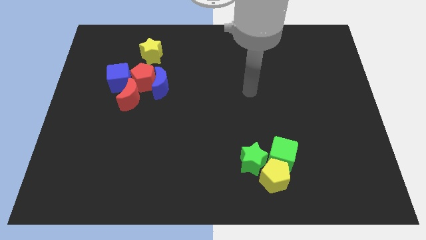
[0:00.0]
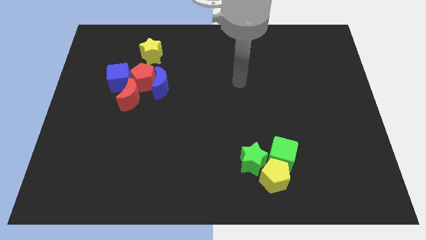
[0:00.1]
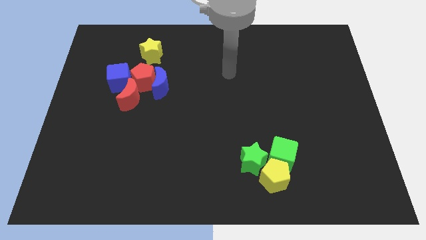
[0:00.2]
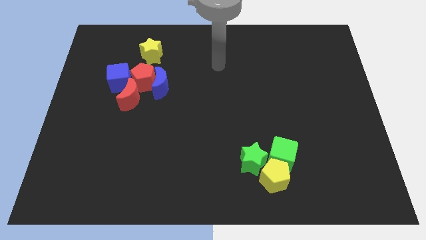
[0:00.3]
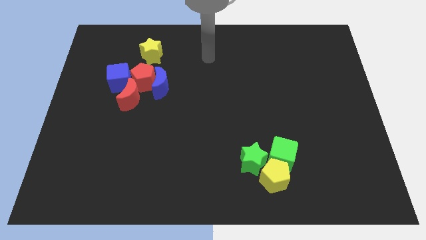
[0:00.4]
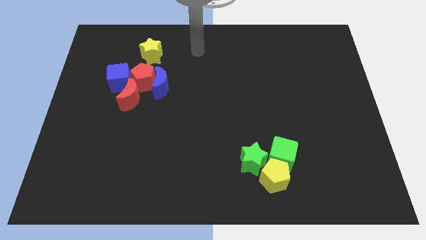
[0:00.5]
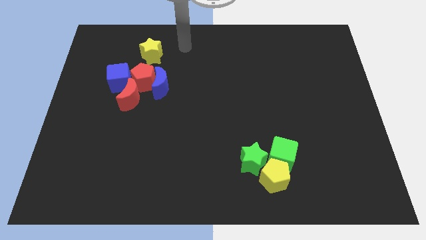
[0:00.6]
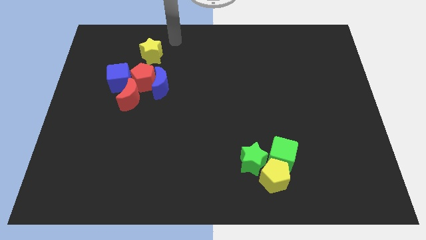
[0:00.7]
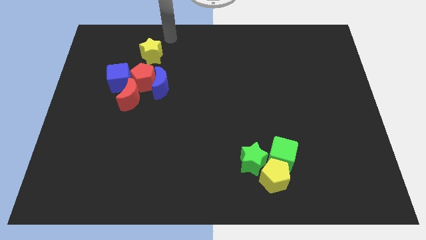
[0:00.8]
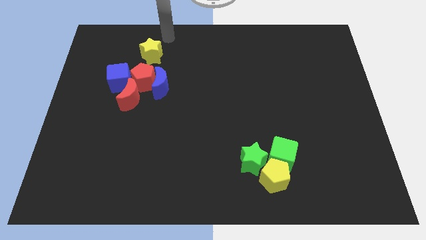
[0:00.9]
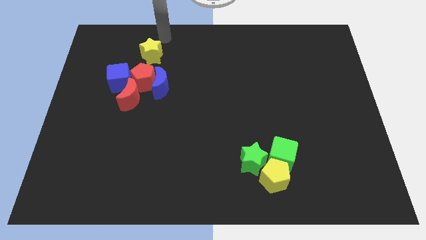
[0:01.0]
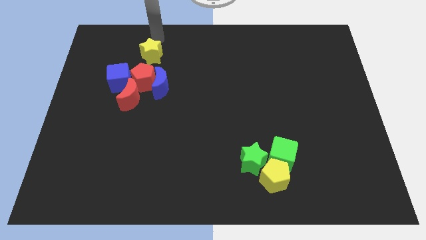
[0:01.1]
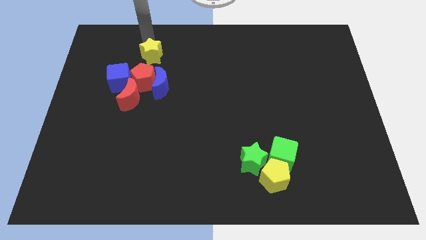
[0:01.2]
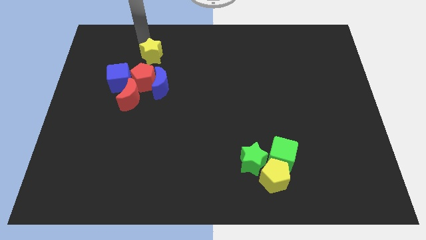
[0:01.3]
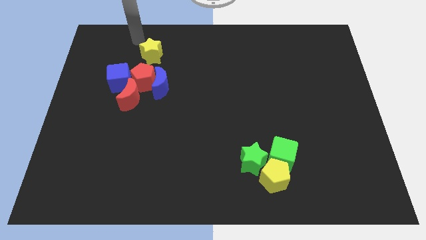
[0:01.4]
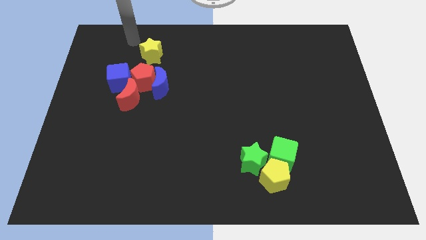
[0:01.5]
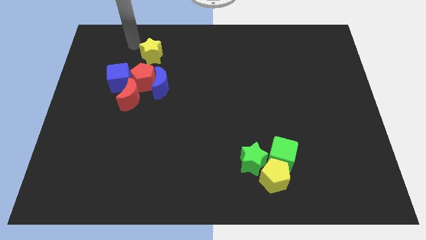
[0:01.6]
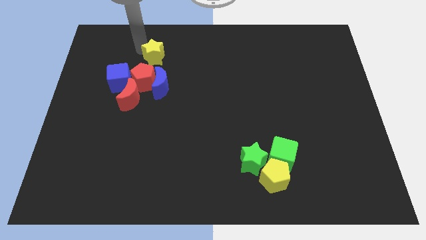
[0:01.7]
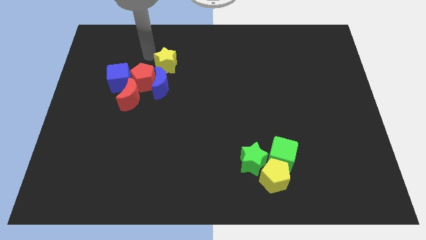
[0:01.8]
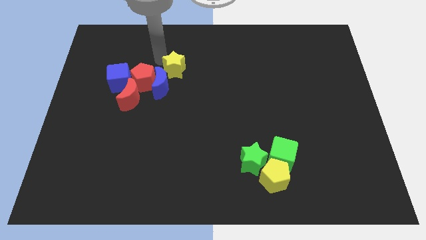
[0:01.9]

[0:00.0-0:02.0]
move the arm into the yellow star

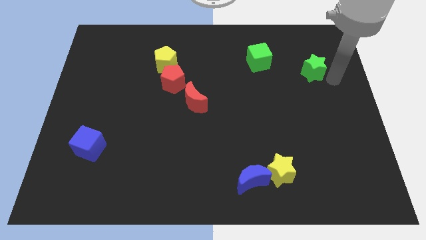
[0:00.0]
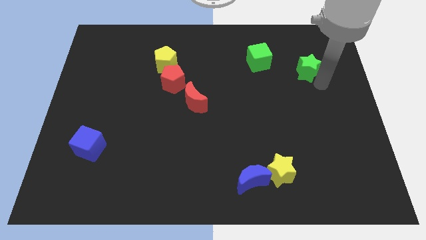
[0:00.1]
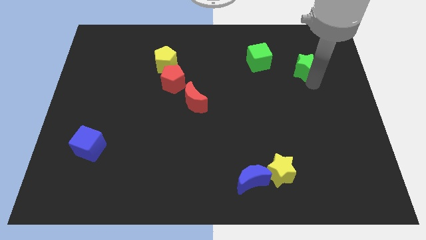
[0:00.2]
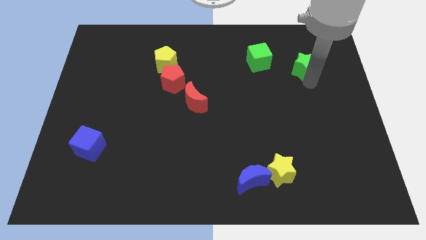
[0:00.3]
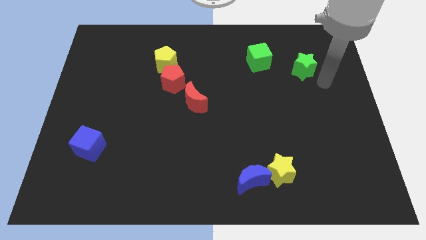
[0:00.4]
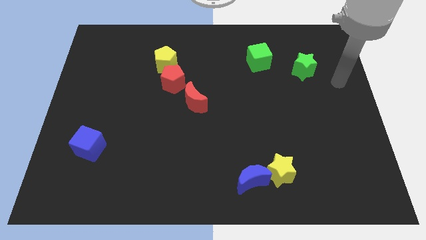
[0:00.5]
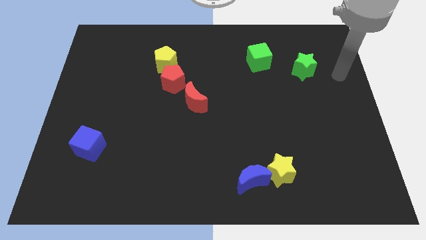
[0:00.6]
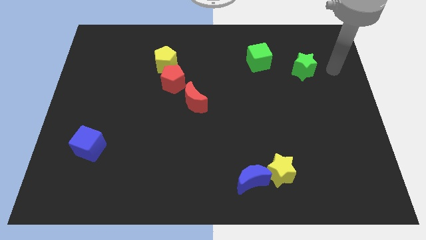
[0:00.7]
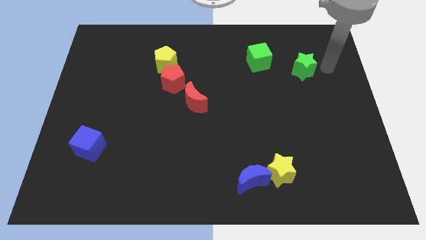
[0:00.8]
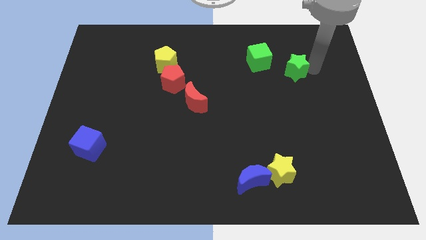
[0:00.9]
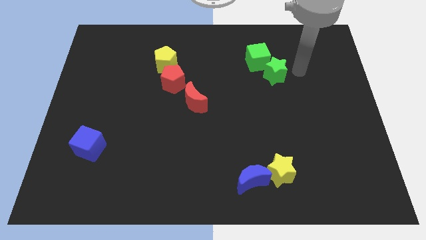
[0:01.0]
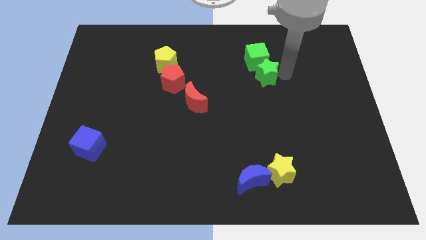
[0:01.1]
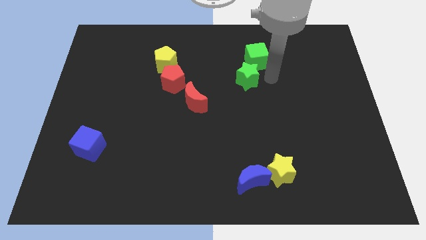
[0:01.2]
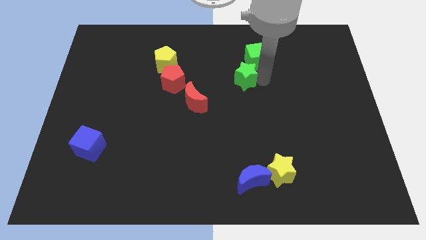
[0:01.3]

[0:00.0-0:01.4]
push the green star to the bottom of the green cube

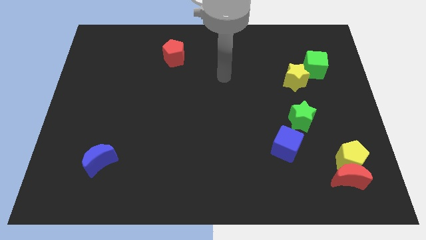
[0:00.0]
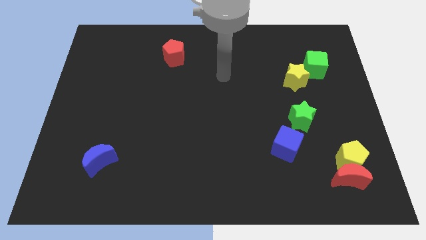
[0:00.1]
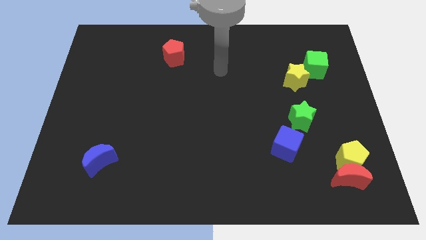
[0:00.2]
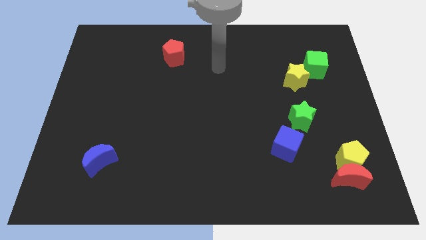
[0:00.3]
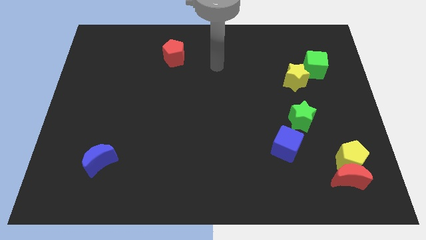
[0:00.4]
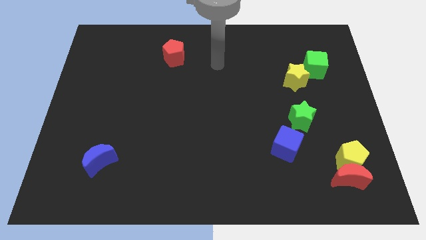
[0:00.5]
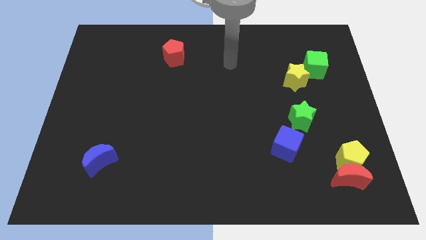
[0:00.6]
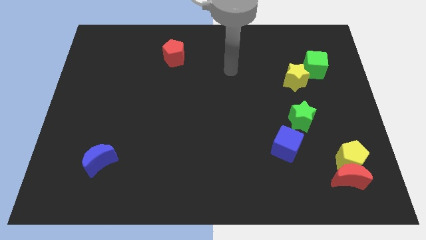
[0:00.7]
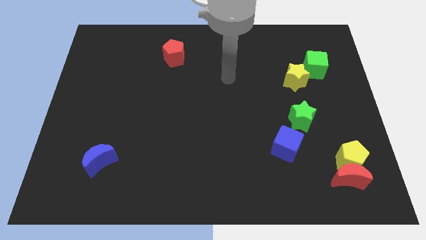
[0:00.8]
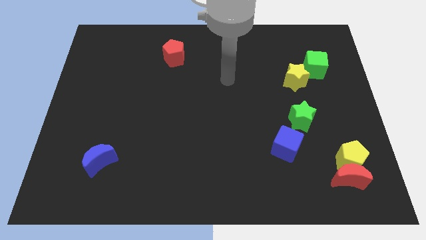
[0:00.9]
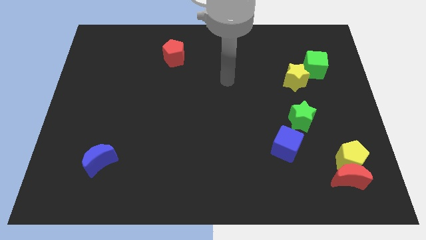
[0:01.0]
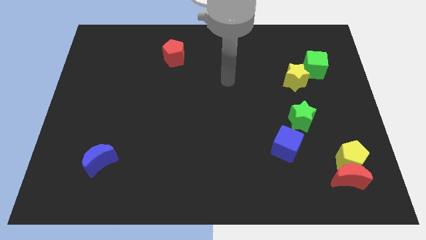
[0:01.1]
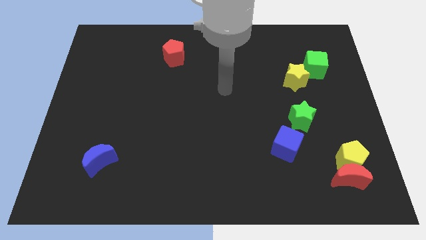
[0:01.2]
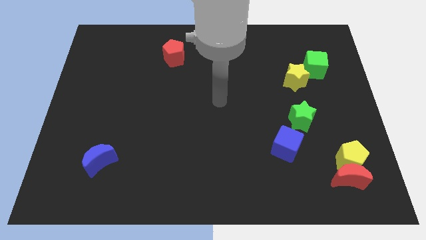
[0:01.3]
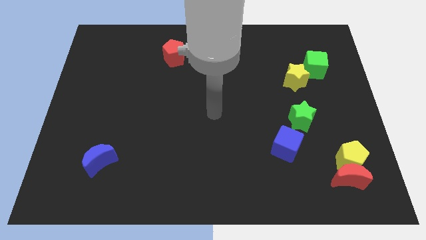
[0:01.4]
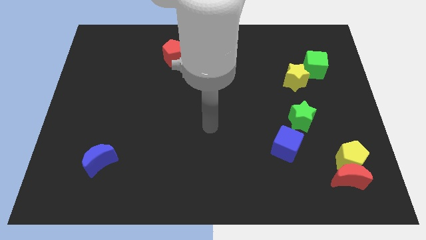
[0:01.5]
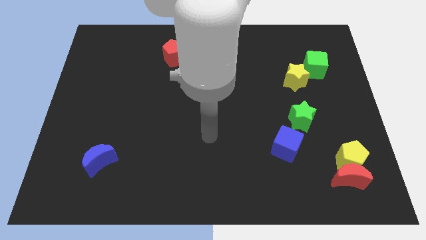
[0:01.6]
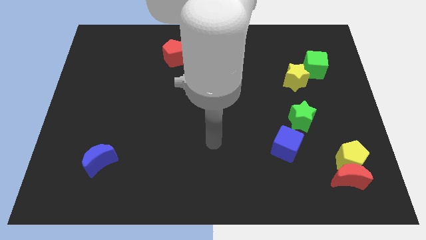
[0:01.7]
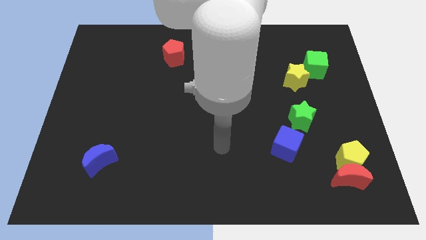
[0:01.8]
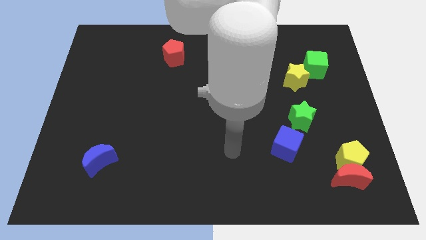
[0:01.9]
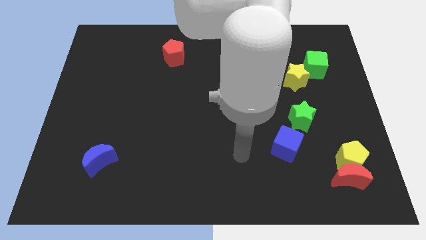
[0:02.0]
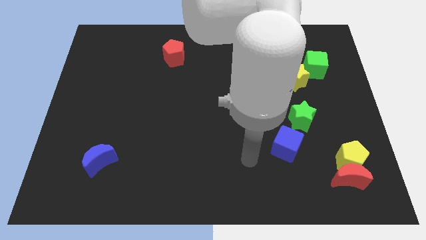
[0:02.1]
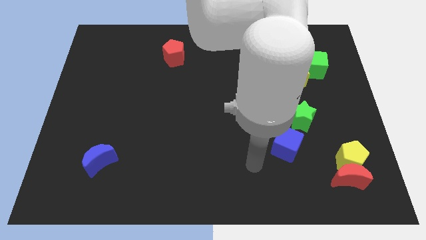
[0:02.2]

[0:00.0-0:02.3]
move your arm to the bottom

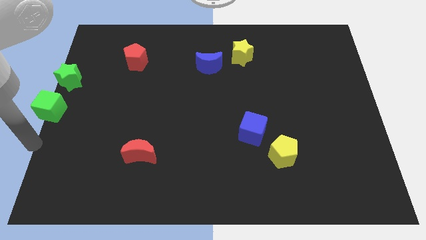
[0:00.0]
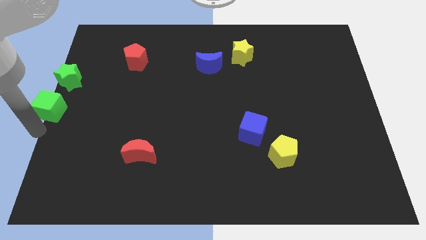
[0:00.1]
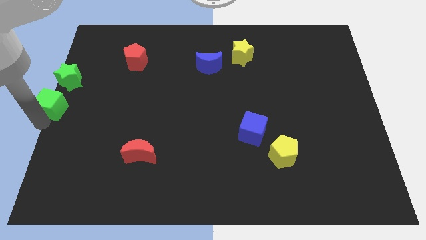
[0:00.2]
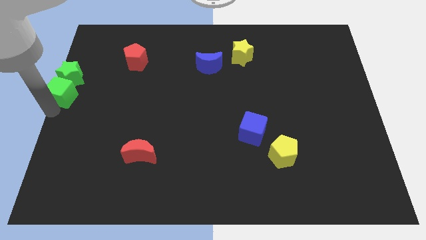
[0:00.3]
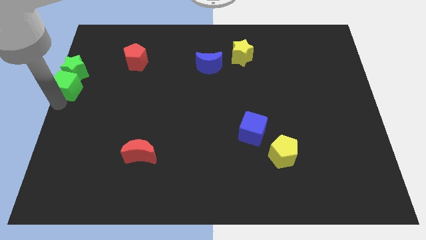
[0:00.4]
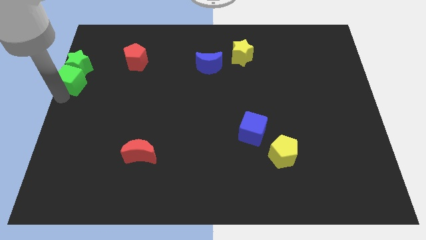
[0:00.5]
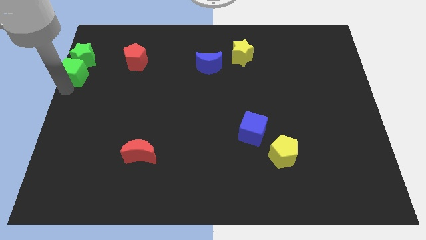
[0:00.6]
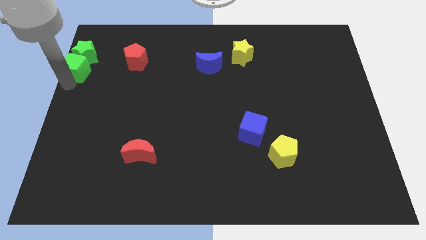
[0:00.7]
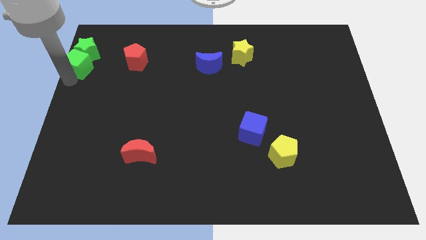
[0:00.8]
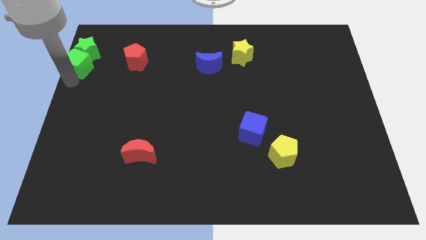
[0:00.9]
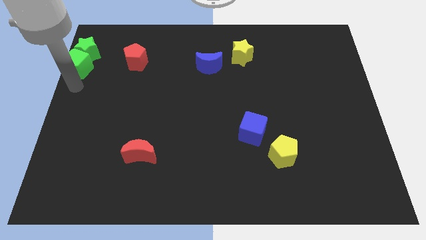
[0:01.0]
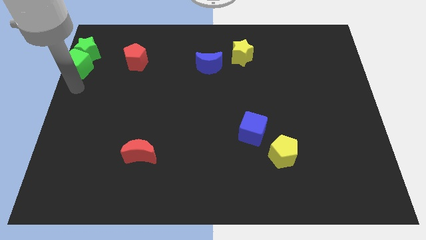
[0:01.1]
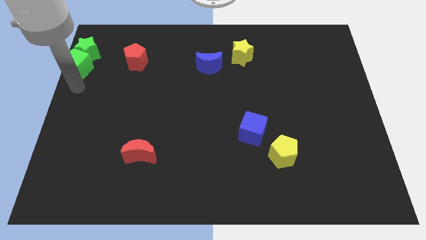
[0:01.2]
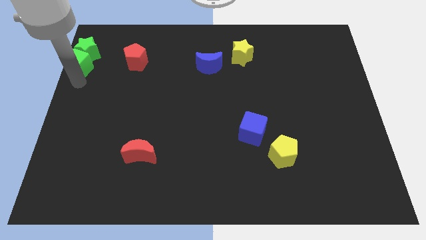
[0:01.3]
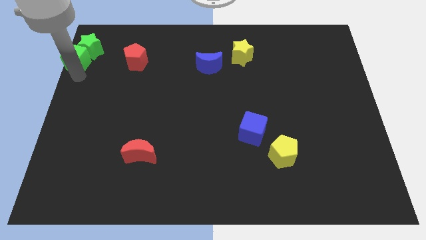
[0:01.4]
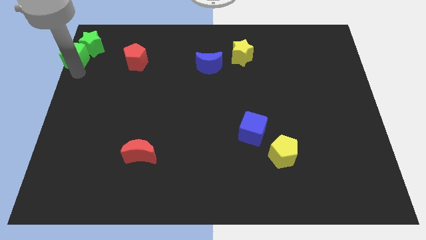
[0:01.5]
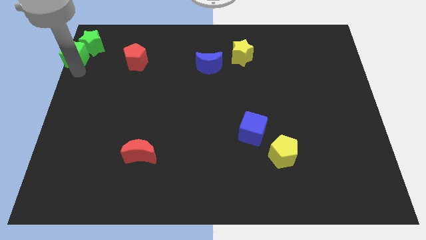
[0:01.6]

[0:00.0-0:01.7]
push the green star and the green cube towards the top

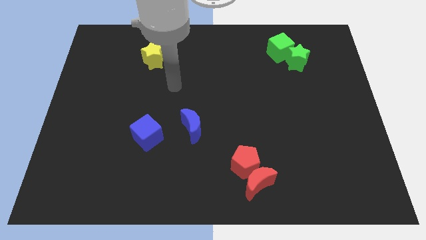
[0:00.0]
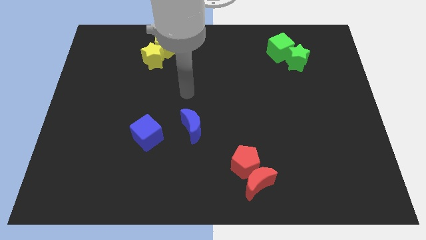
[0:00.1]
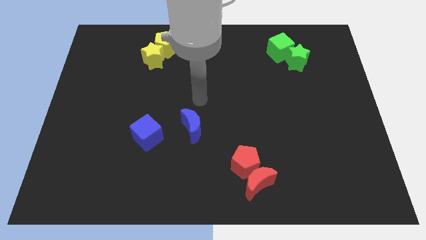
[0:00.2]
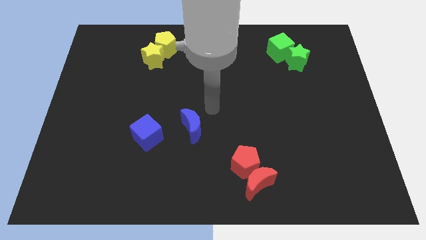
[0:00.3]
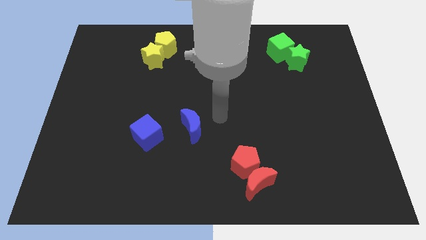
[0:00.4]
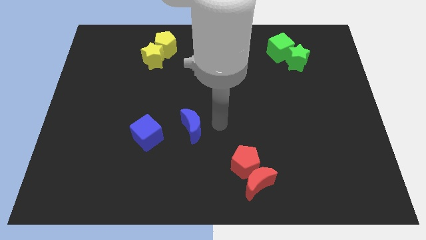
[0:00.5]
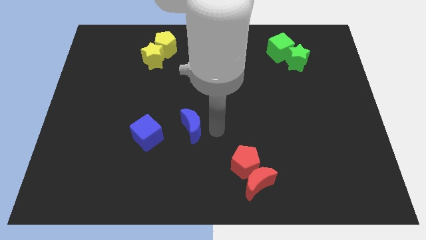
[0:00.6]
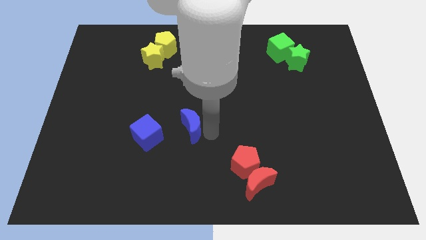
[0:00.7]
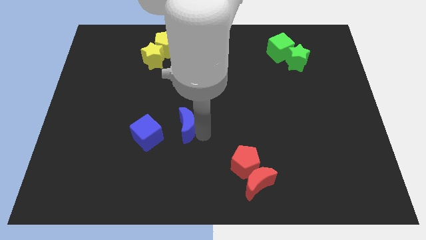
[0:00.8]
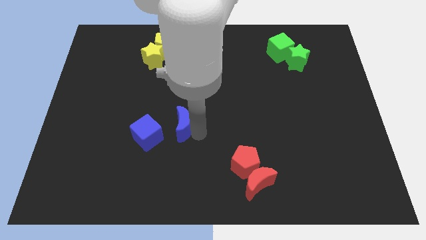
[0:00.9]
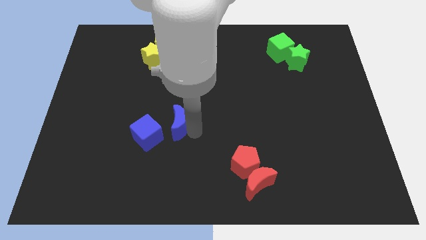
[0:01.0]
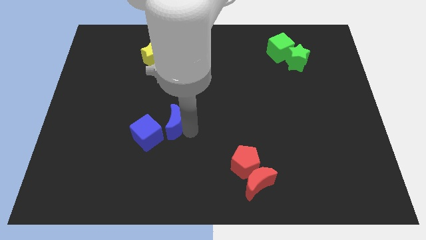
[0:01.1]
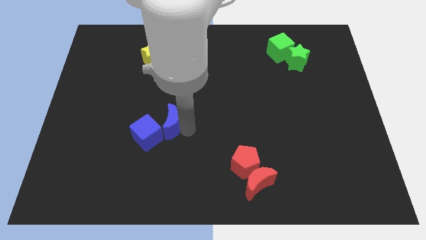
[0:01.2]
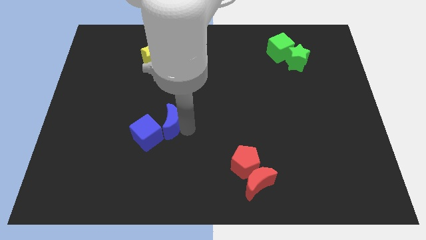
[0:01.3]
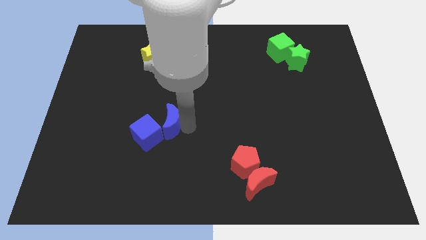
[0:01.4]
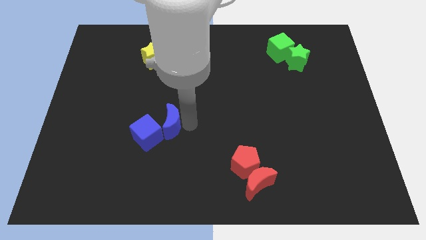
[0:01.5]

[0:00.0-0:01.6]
put the blue blocks together
